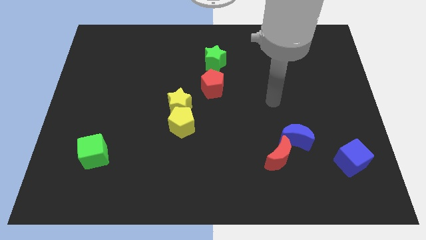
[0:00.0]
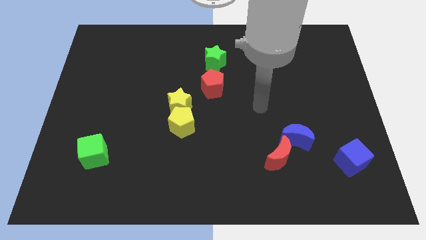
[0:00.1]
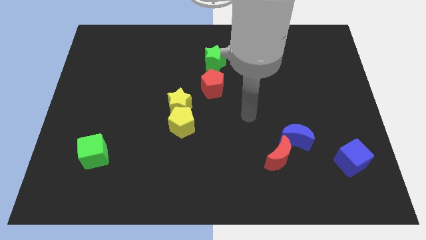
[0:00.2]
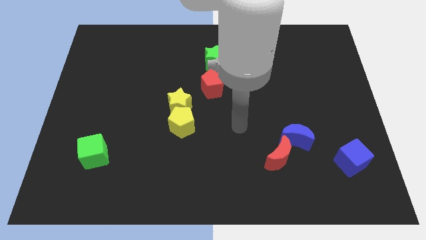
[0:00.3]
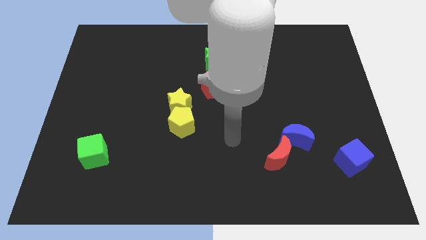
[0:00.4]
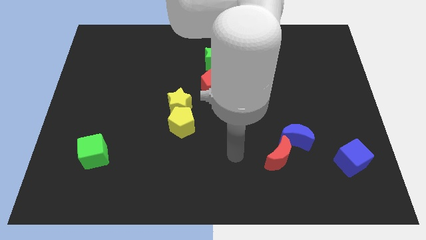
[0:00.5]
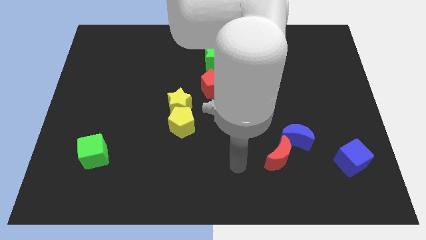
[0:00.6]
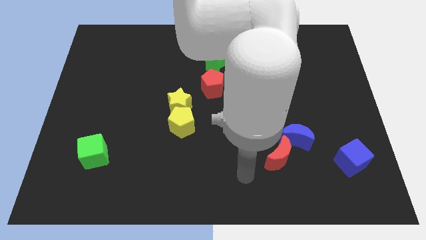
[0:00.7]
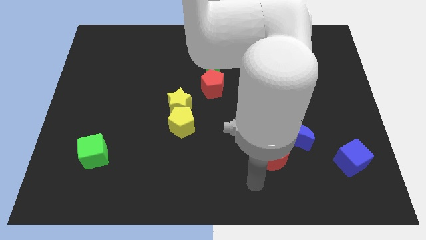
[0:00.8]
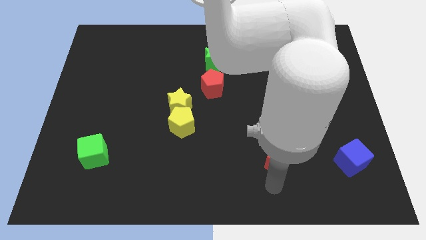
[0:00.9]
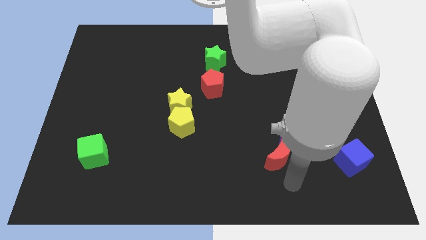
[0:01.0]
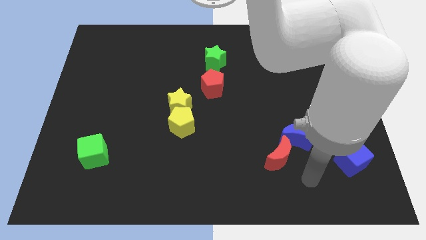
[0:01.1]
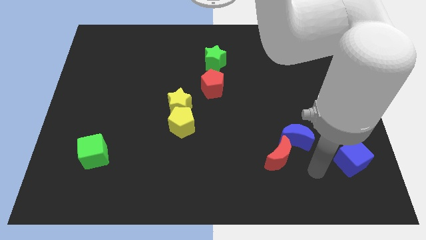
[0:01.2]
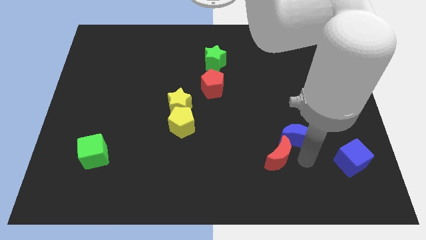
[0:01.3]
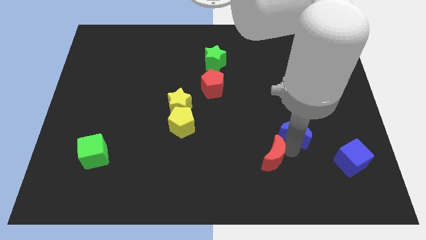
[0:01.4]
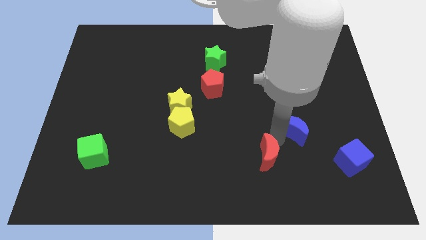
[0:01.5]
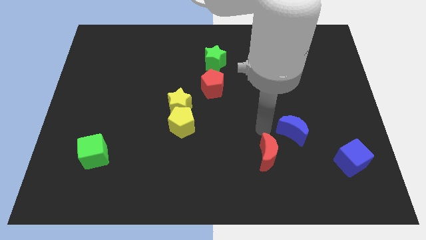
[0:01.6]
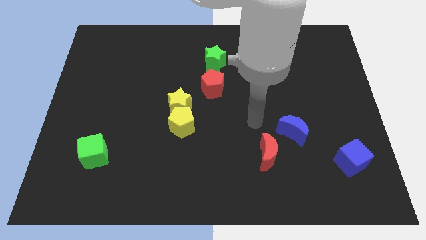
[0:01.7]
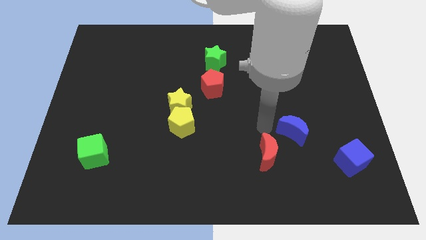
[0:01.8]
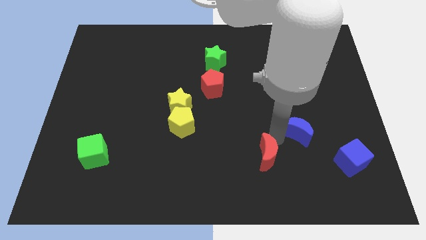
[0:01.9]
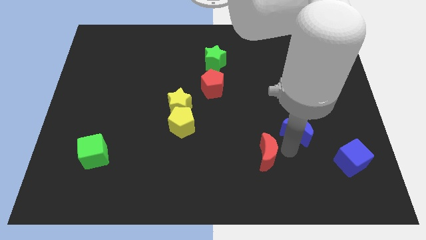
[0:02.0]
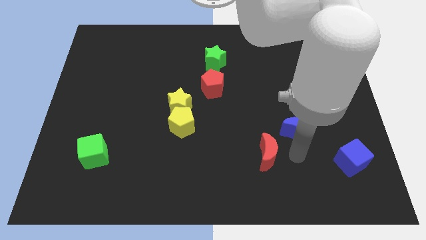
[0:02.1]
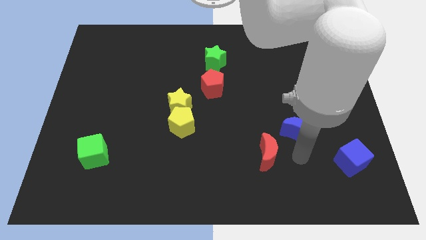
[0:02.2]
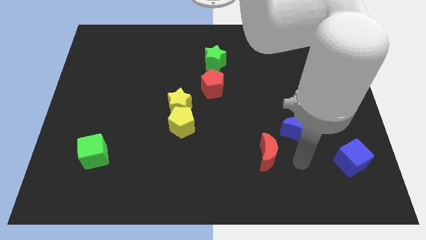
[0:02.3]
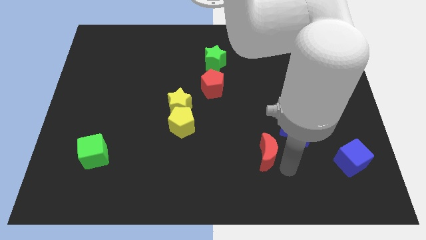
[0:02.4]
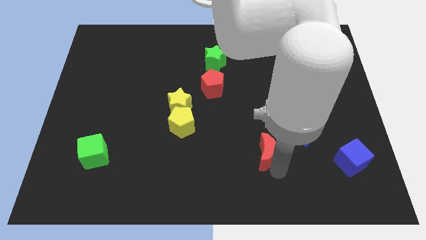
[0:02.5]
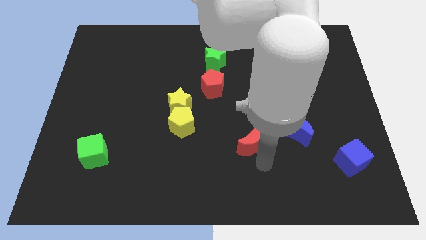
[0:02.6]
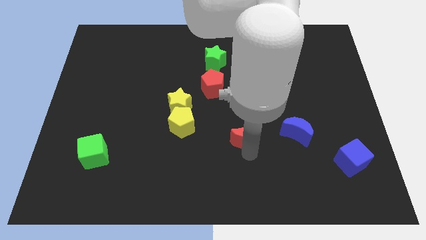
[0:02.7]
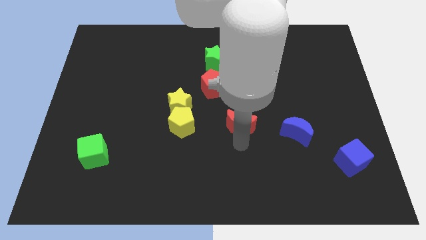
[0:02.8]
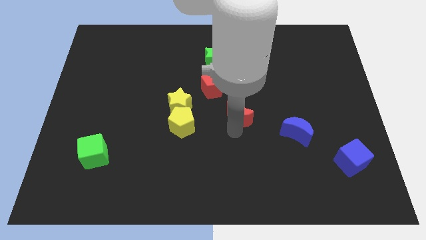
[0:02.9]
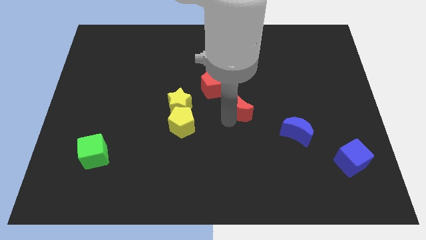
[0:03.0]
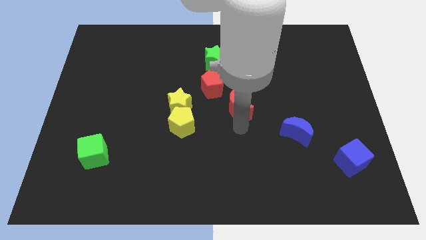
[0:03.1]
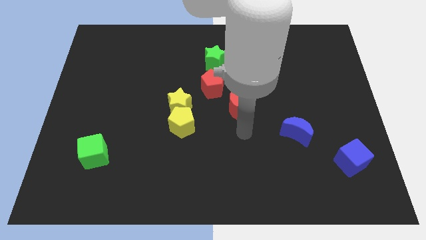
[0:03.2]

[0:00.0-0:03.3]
separate the red moon from the blue moon

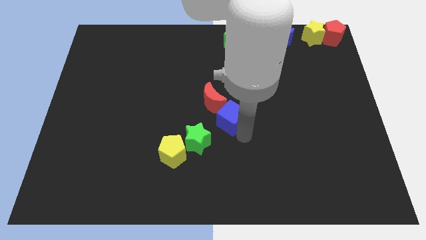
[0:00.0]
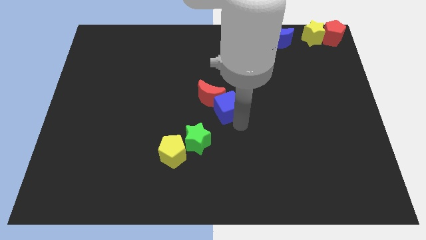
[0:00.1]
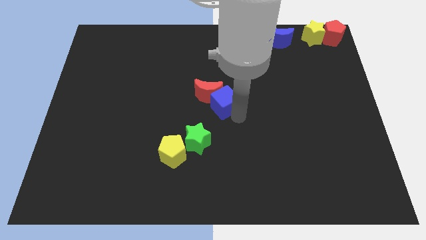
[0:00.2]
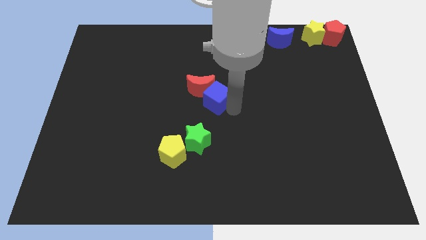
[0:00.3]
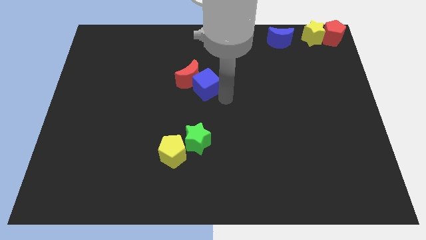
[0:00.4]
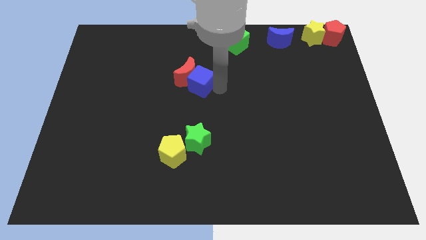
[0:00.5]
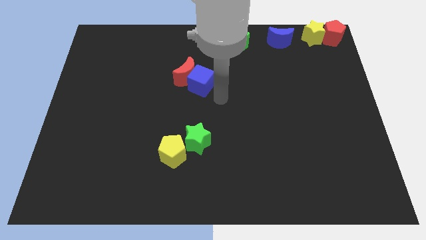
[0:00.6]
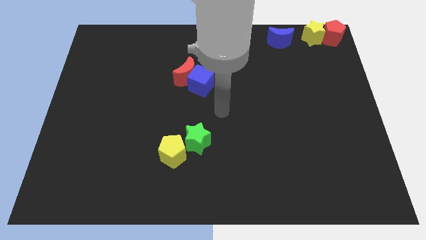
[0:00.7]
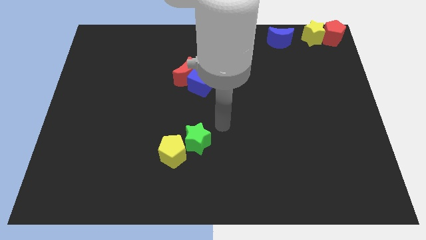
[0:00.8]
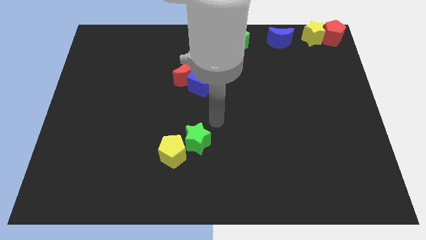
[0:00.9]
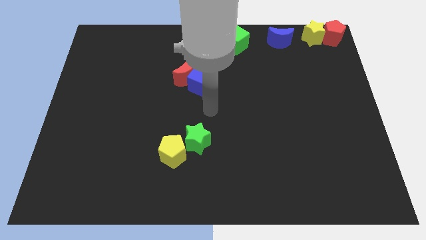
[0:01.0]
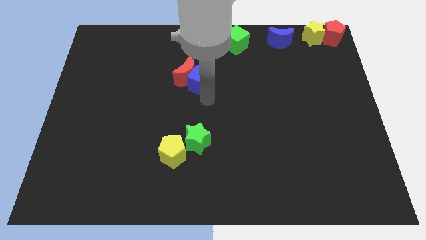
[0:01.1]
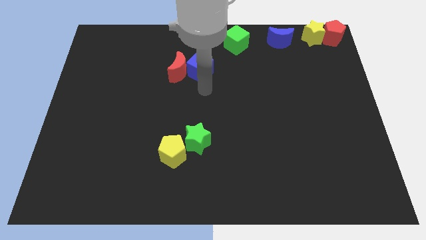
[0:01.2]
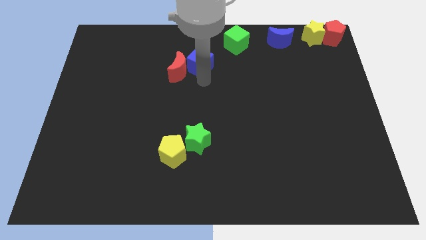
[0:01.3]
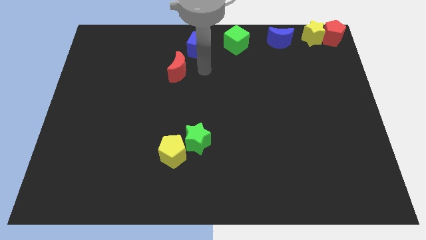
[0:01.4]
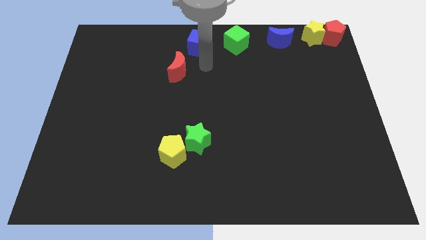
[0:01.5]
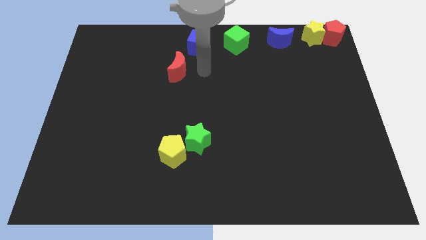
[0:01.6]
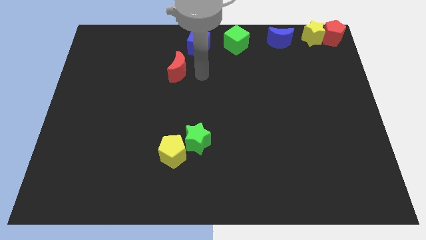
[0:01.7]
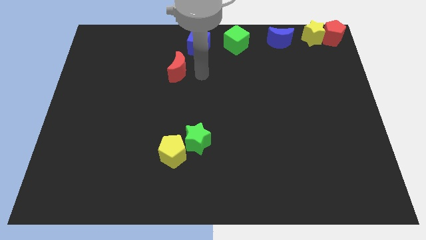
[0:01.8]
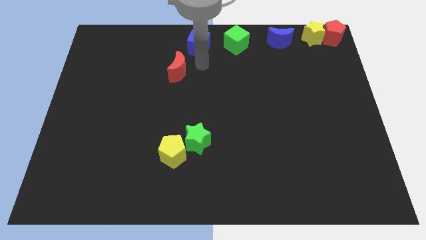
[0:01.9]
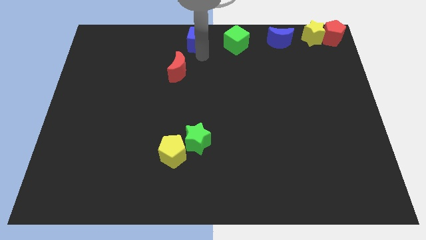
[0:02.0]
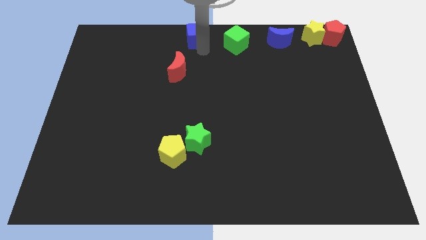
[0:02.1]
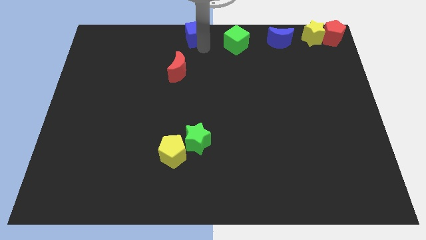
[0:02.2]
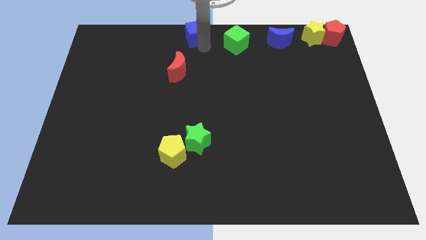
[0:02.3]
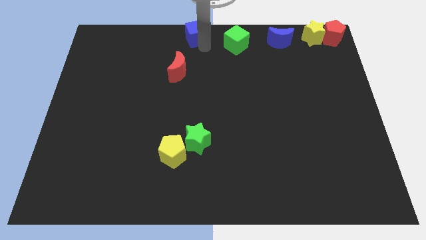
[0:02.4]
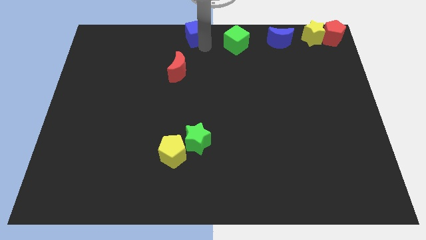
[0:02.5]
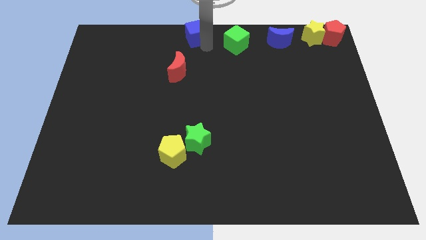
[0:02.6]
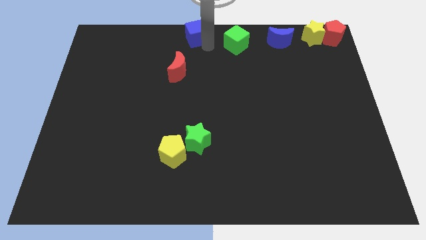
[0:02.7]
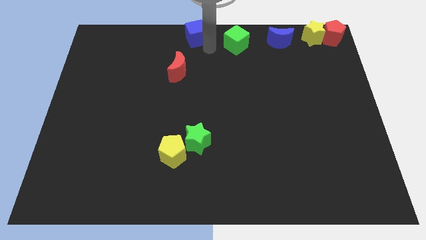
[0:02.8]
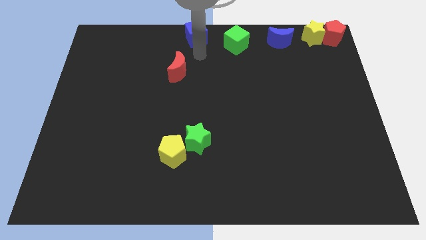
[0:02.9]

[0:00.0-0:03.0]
slide the blue cube to the top center of the board

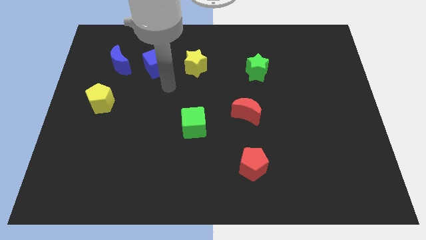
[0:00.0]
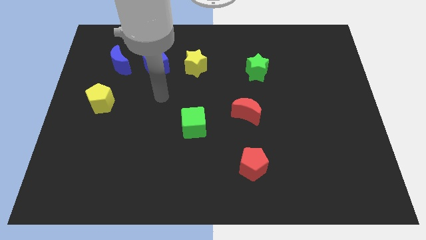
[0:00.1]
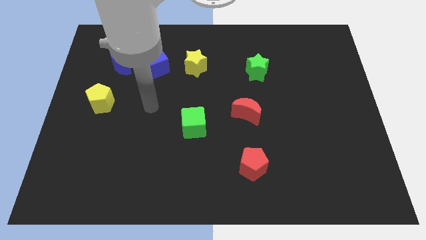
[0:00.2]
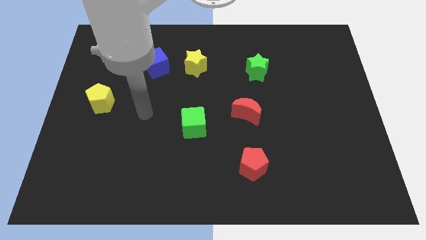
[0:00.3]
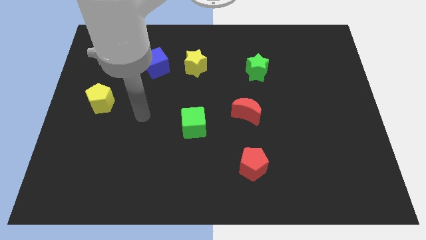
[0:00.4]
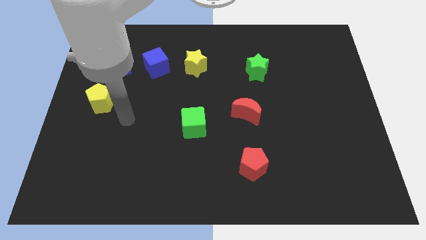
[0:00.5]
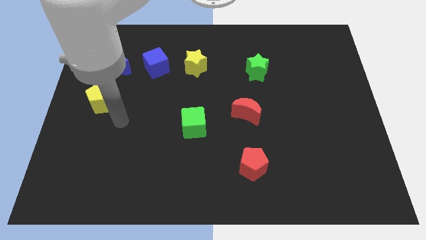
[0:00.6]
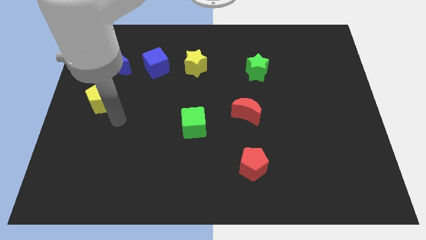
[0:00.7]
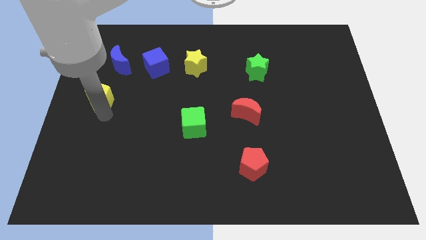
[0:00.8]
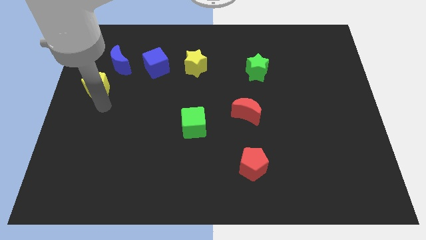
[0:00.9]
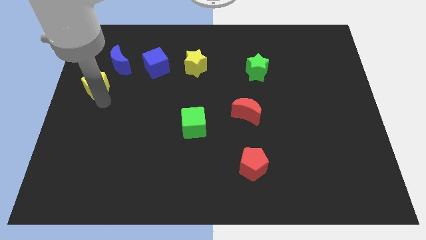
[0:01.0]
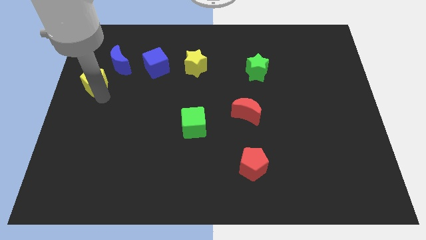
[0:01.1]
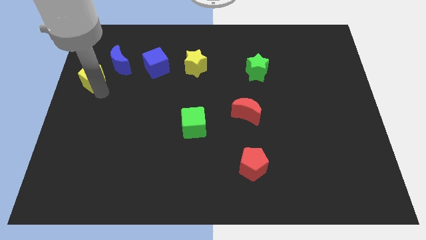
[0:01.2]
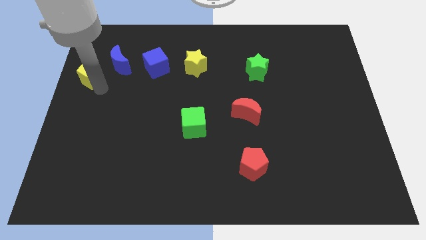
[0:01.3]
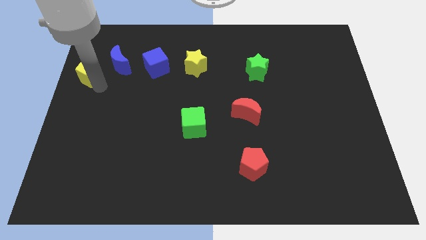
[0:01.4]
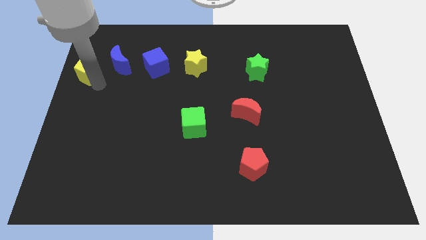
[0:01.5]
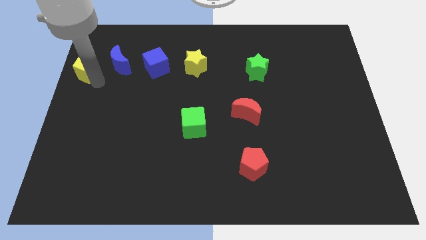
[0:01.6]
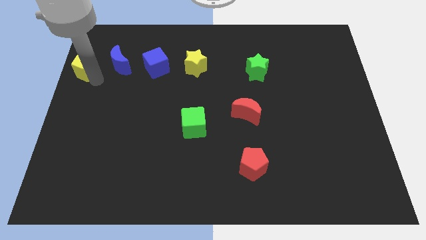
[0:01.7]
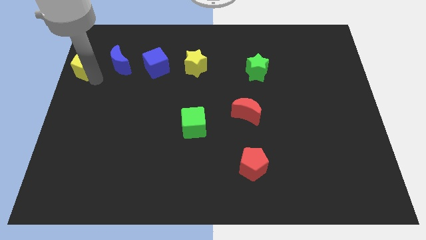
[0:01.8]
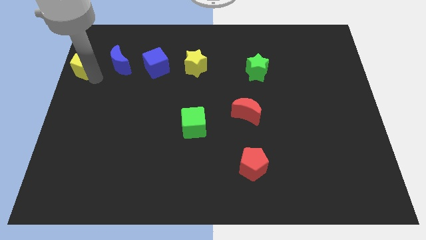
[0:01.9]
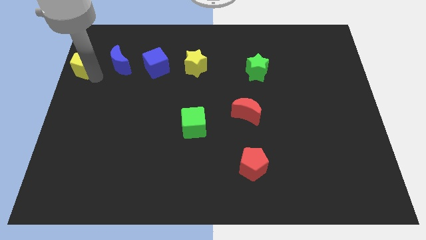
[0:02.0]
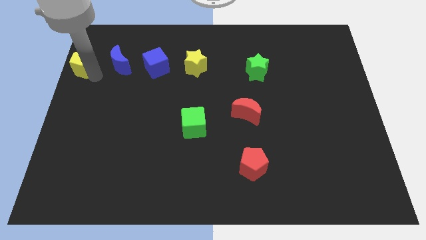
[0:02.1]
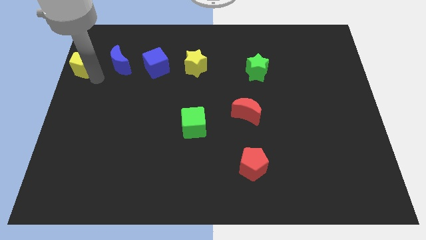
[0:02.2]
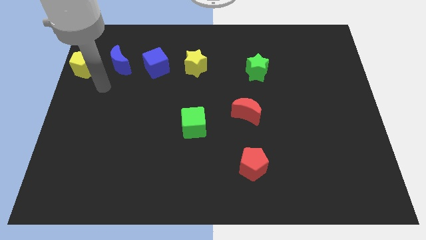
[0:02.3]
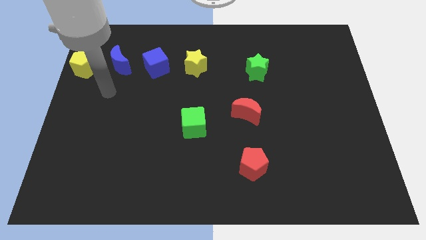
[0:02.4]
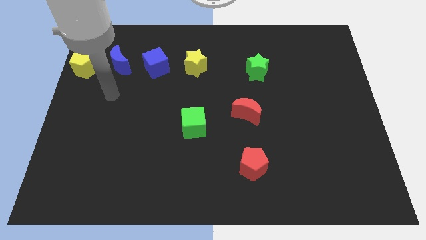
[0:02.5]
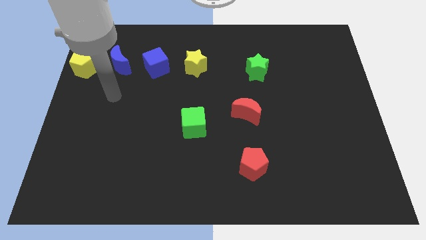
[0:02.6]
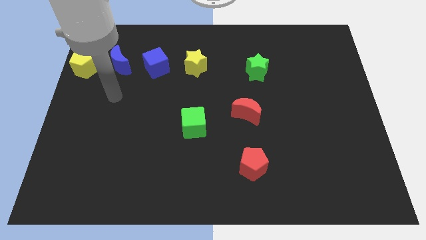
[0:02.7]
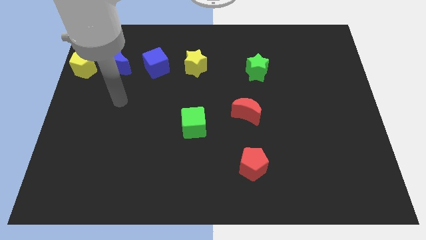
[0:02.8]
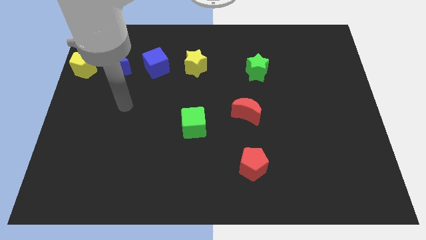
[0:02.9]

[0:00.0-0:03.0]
push the yellow pentagon to the left of the blue crescent to form a line
